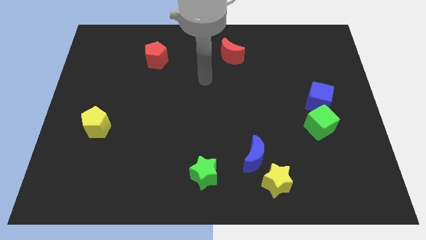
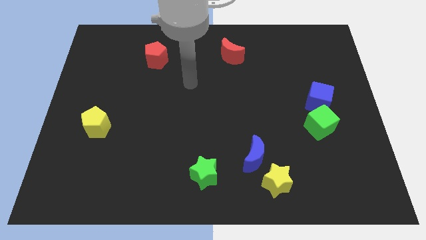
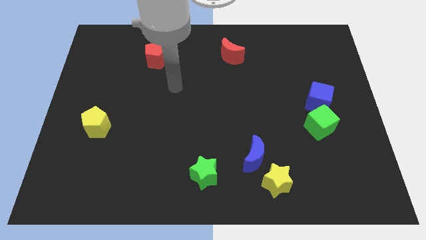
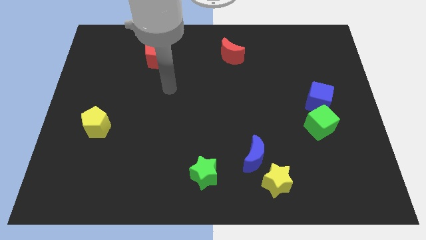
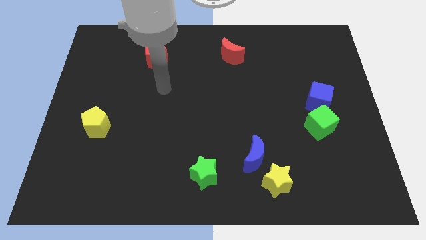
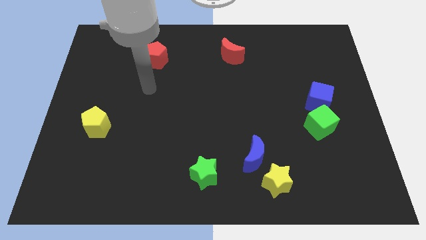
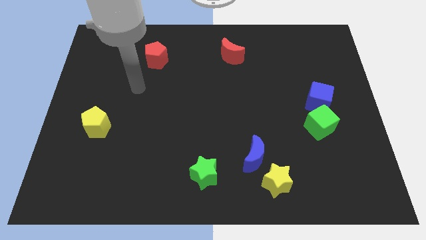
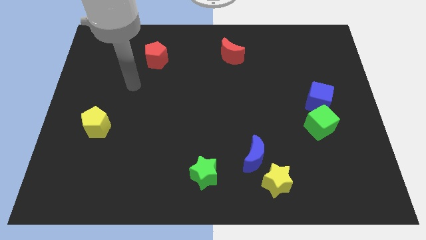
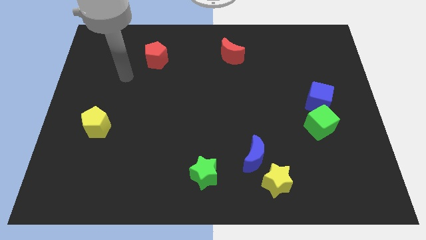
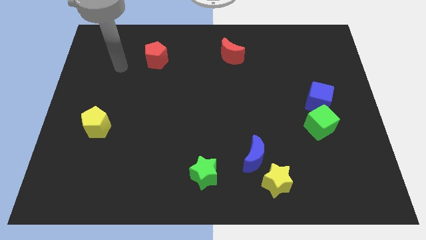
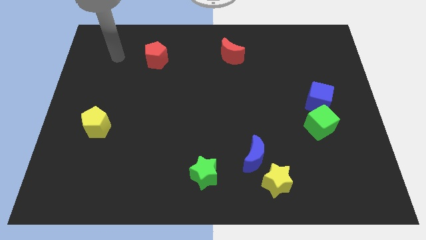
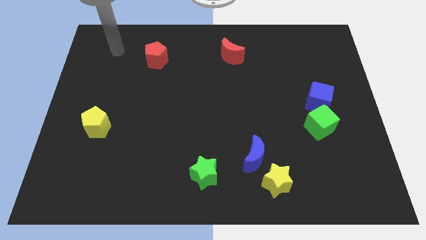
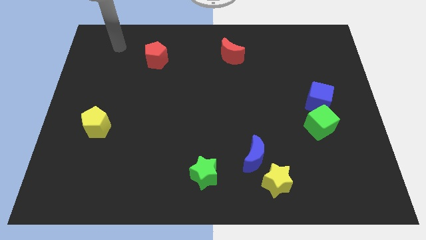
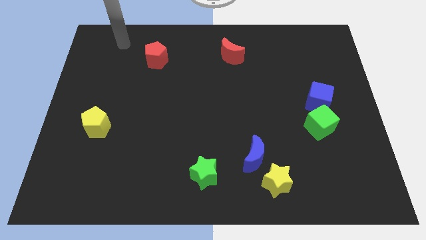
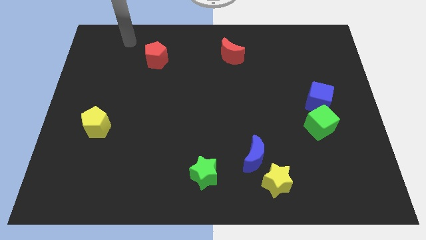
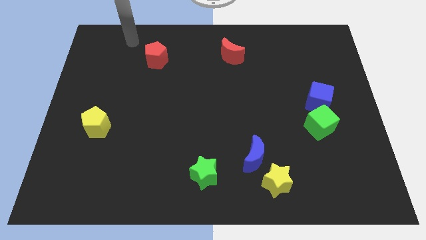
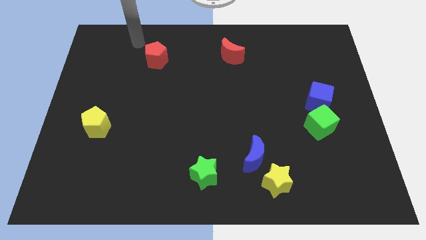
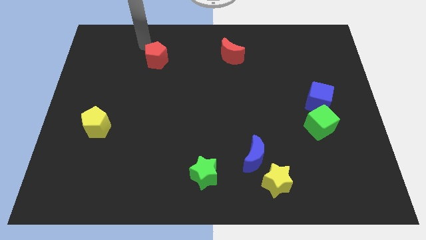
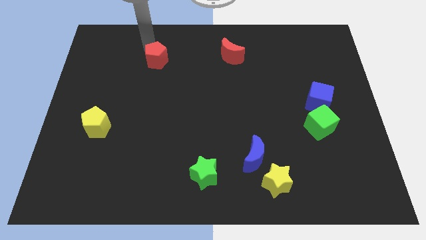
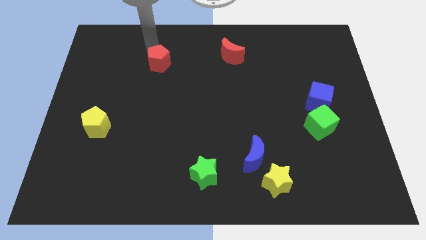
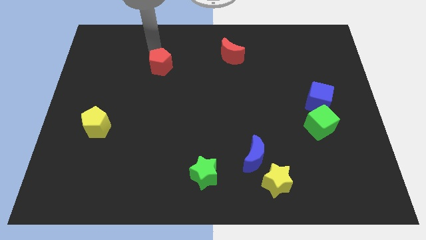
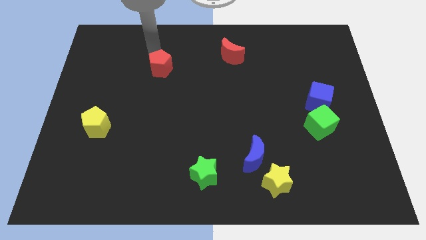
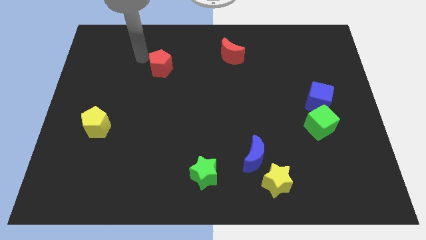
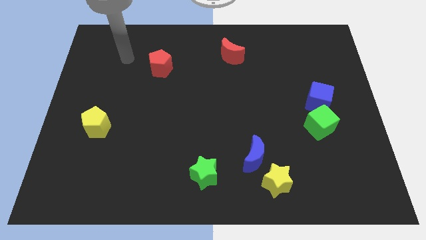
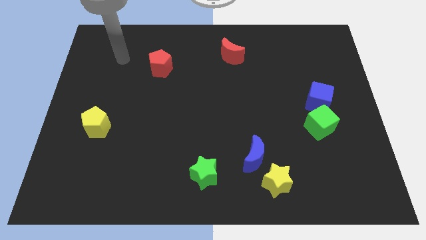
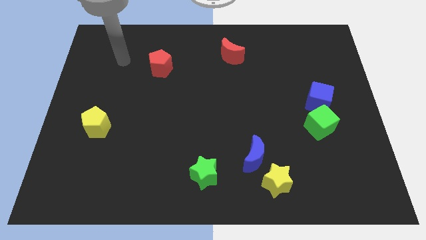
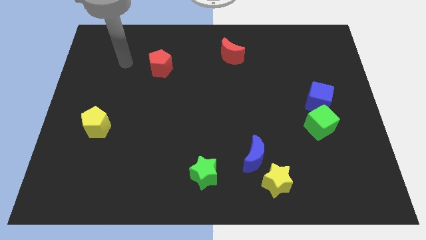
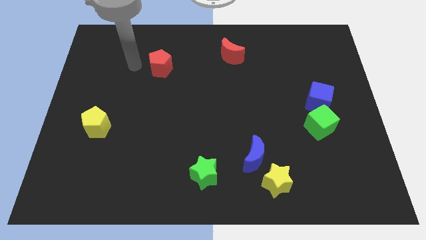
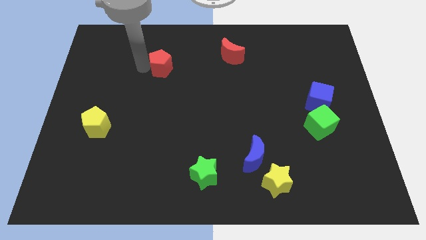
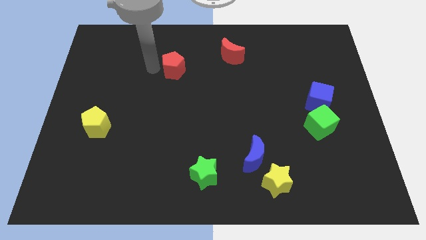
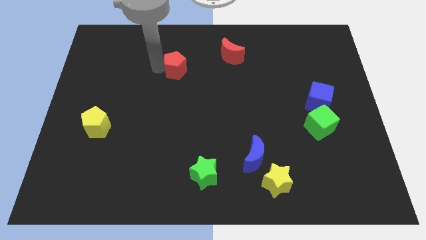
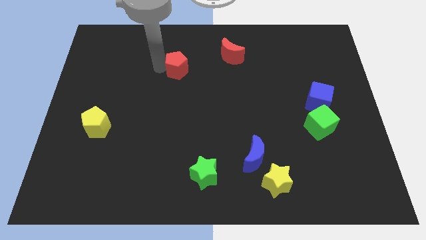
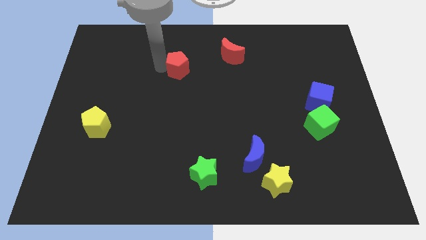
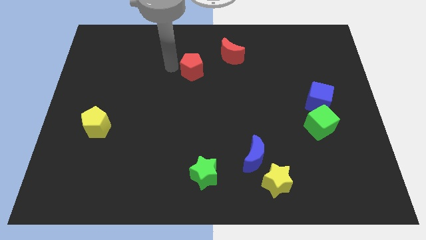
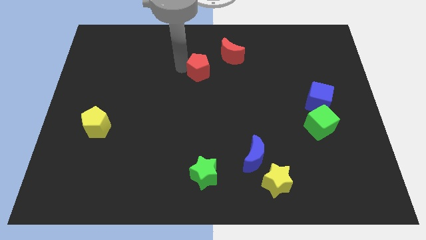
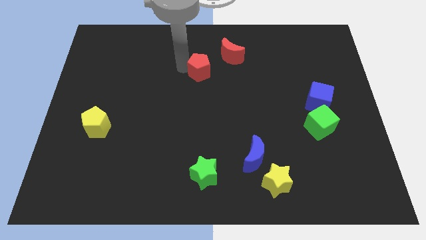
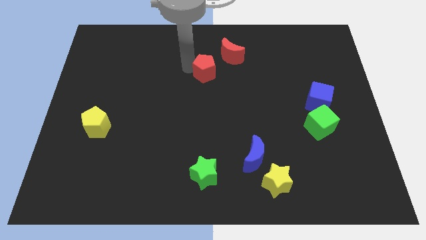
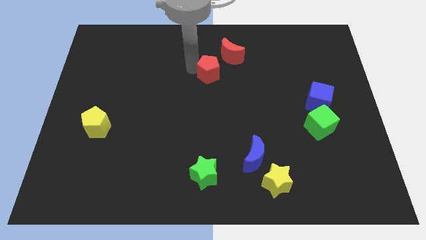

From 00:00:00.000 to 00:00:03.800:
place the red pentagon in between the red moon and yellow pentagon

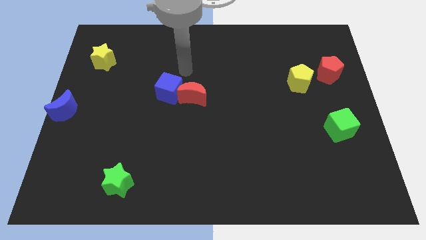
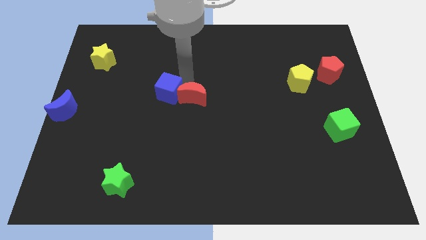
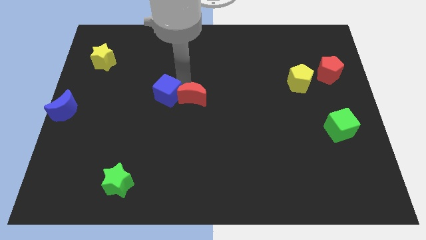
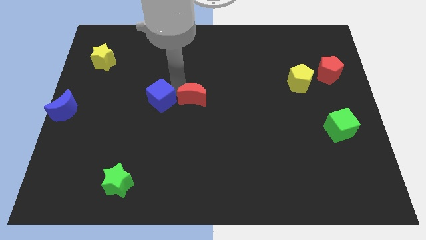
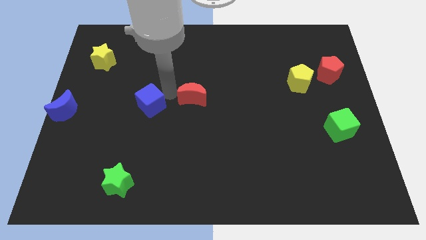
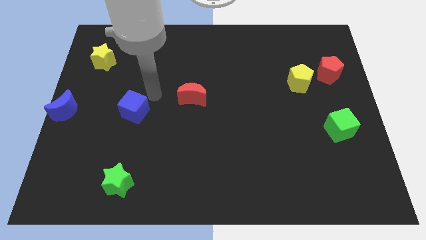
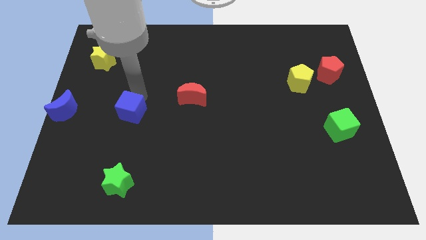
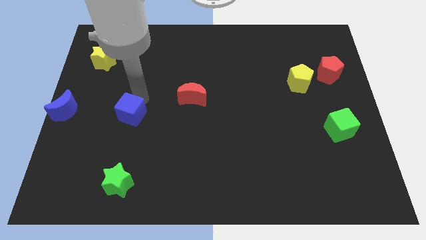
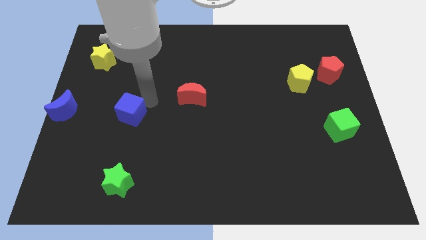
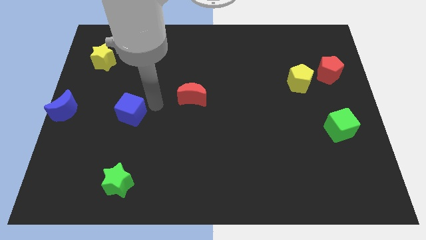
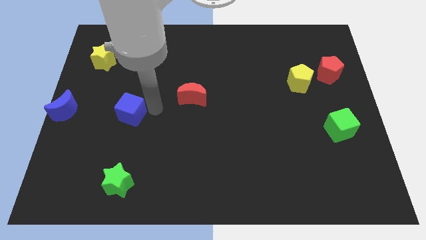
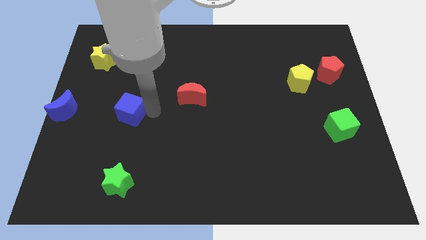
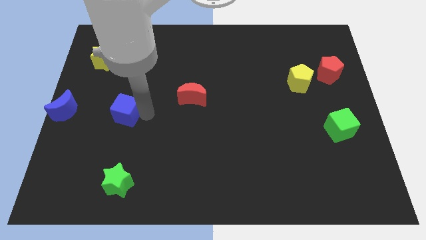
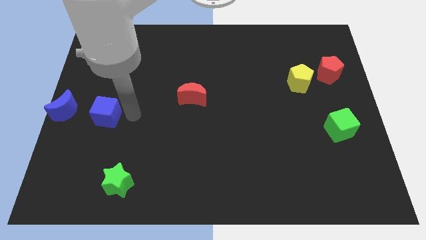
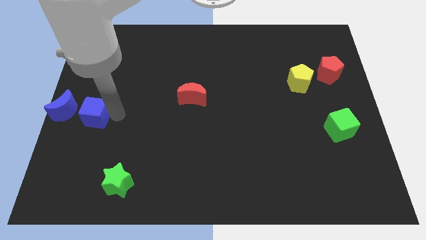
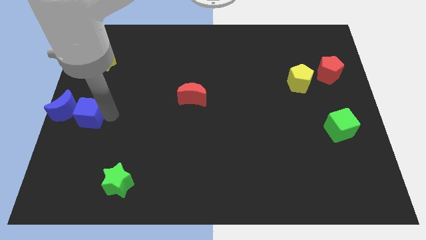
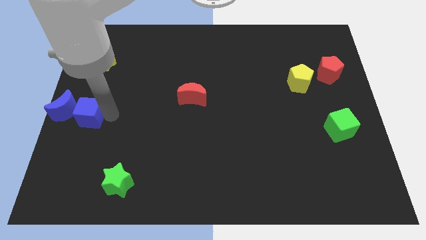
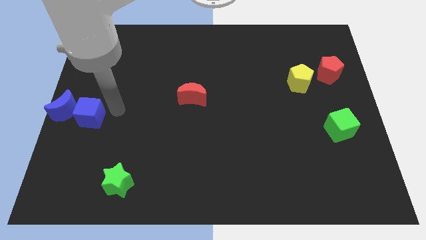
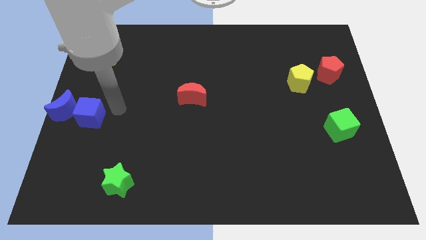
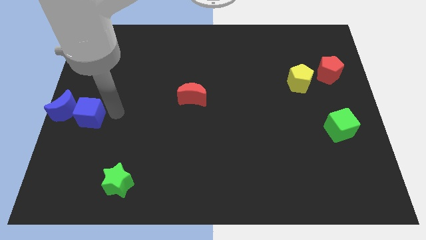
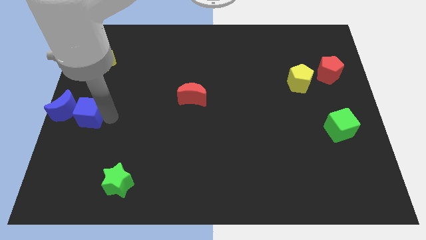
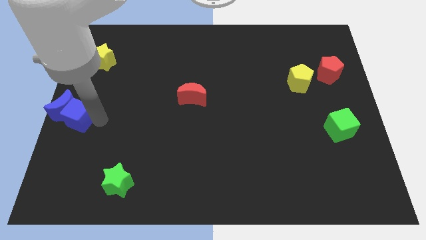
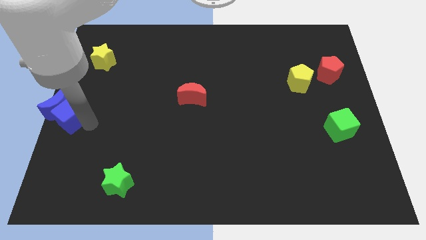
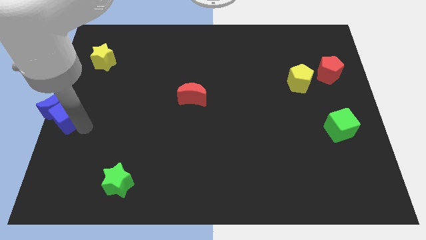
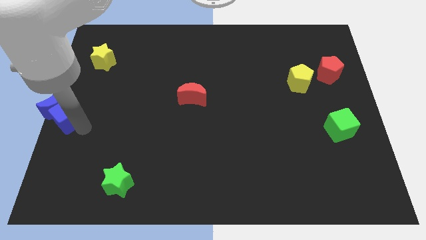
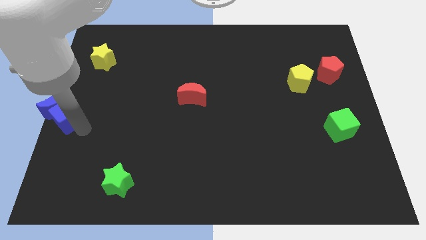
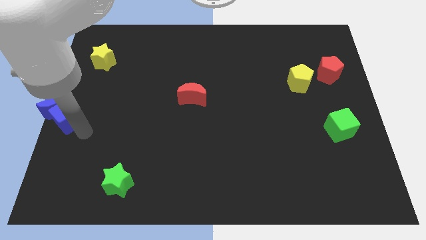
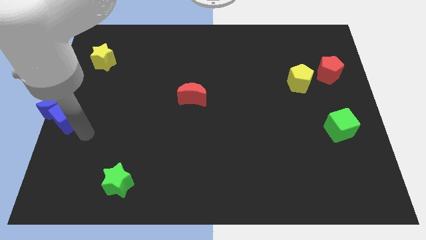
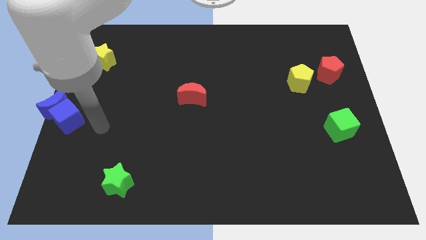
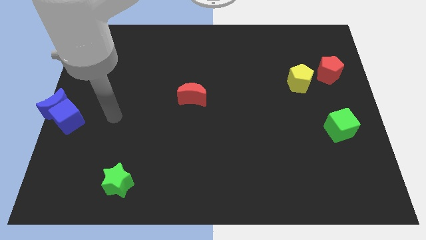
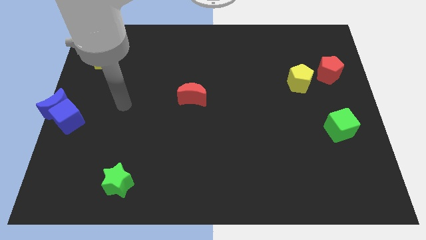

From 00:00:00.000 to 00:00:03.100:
move blue cube into blue moon

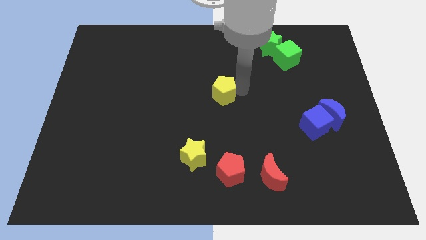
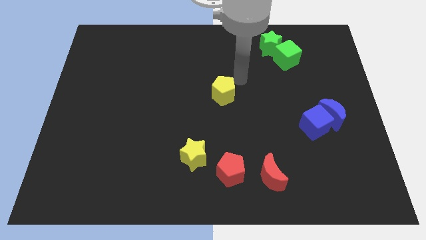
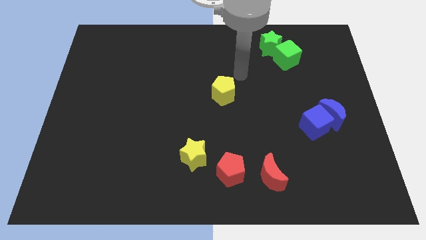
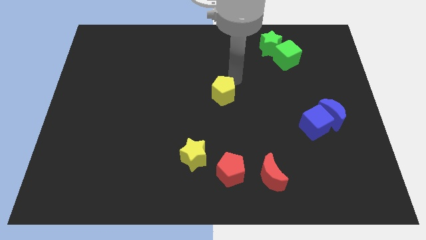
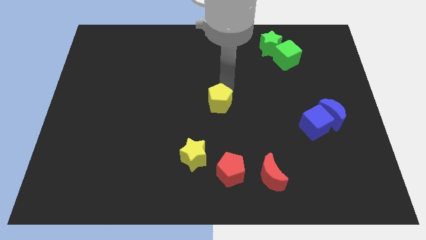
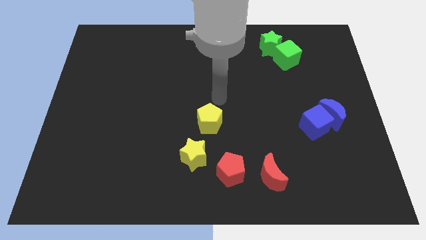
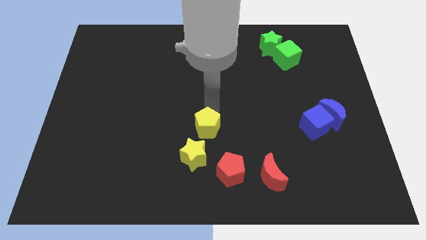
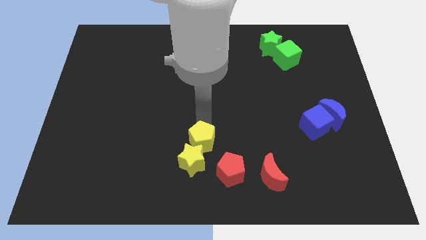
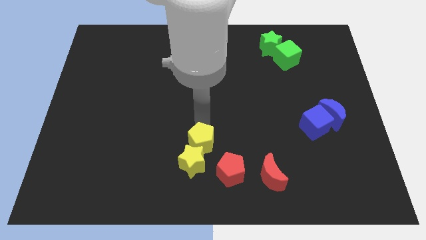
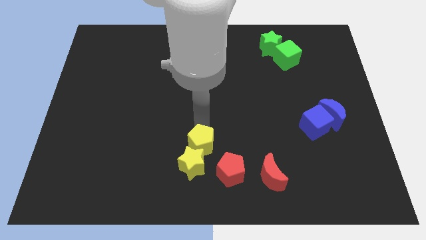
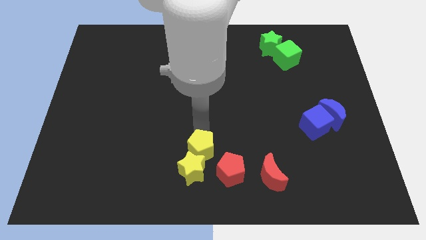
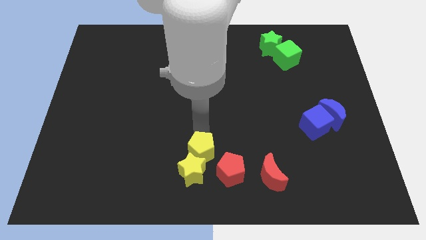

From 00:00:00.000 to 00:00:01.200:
add yellow pentagon into yellow star

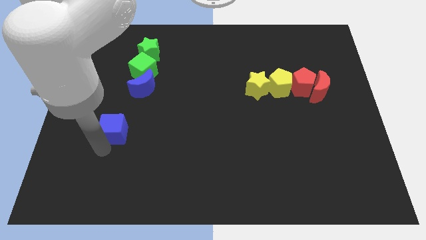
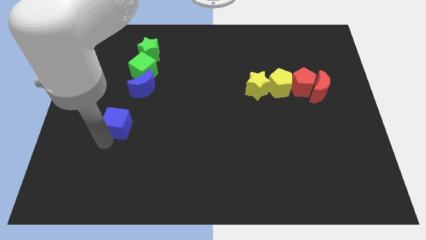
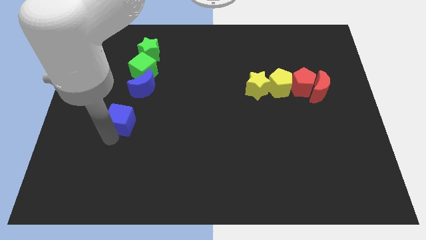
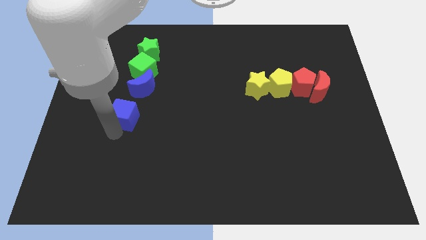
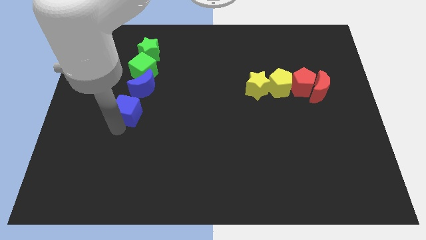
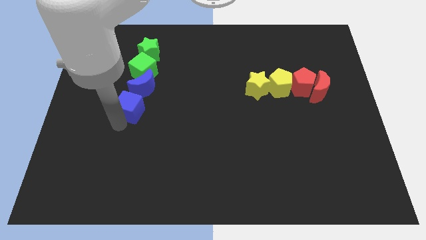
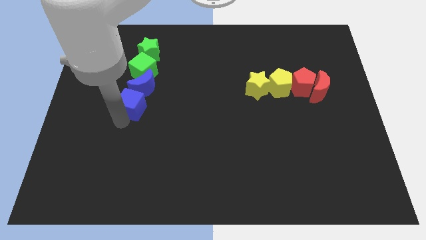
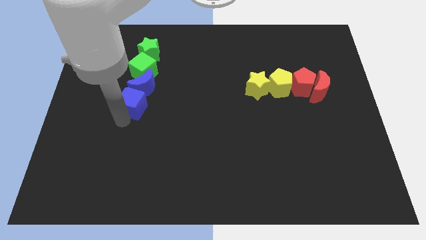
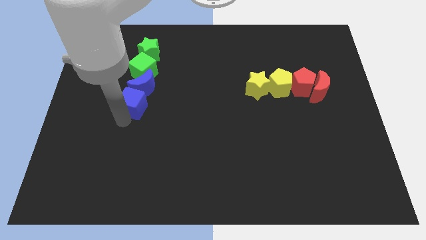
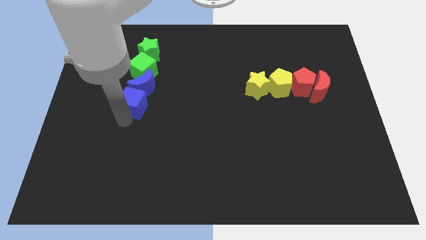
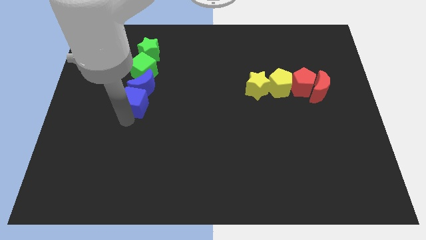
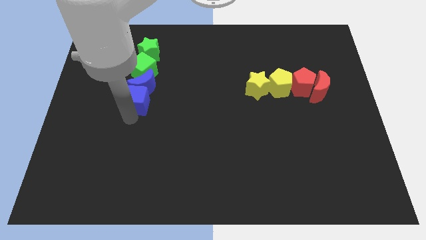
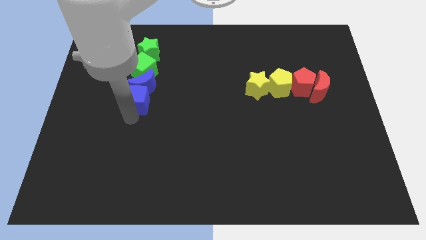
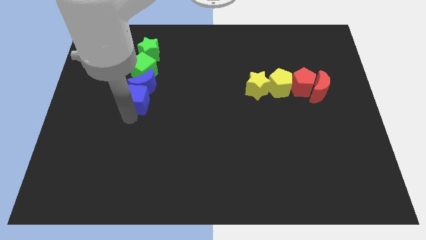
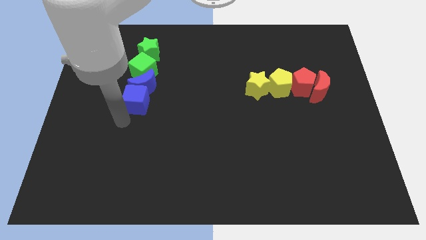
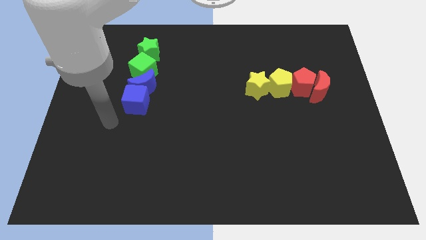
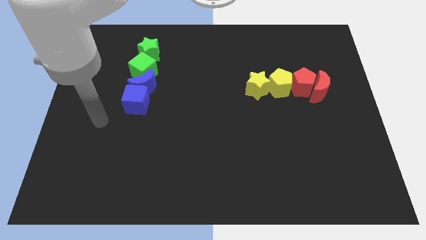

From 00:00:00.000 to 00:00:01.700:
push the blue cube into the blue crescent
